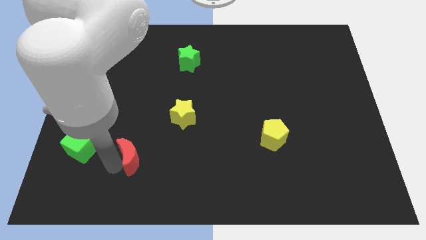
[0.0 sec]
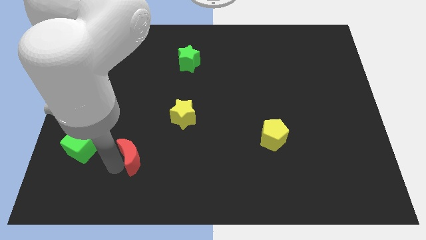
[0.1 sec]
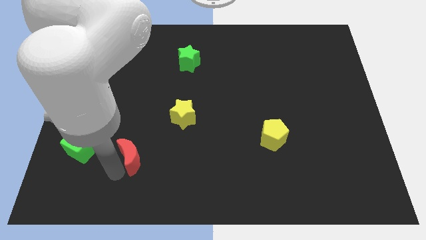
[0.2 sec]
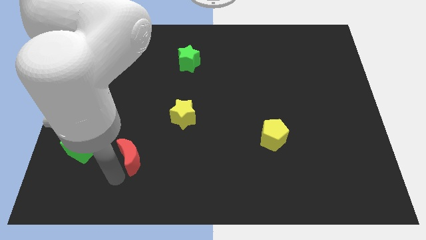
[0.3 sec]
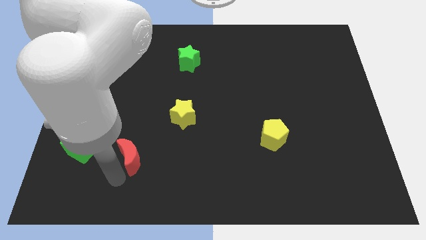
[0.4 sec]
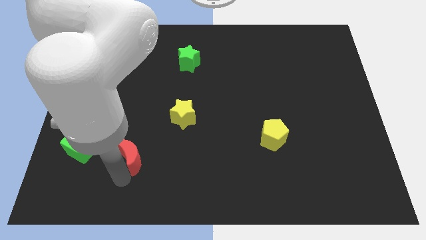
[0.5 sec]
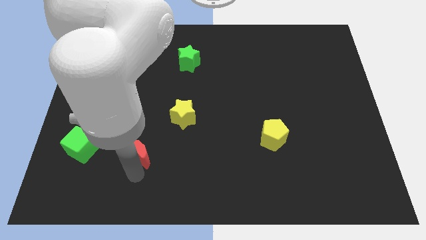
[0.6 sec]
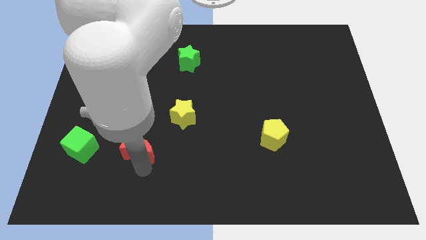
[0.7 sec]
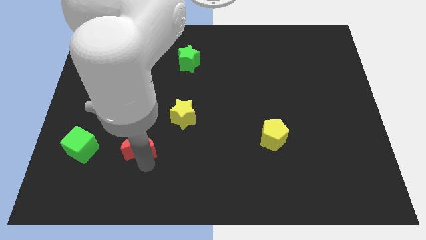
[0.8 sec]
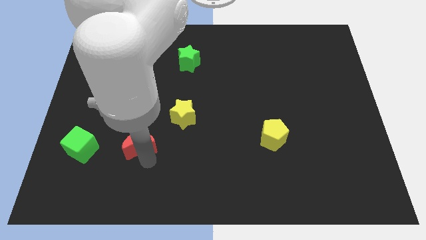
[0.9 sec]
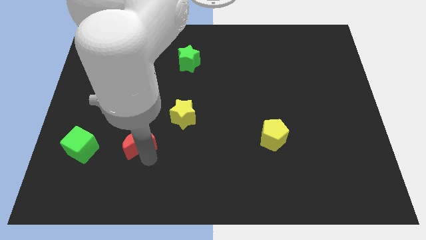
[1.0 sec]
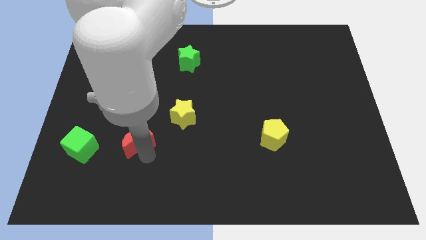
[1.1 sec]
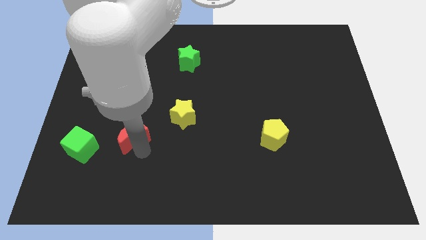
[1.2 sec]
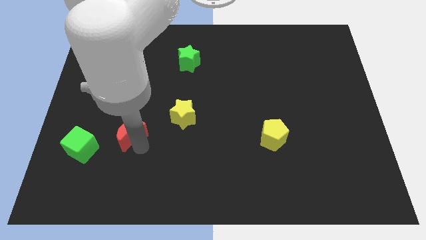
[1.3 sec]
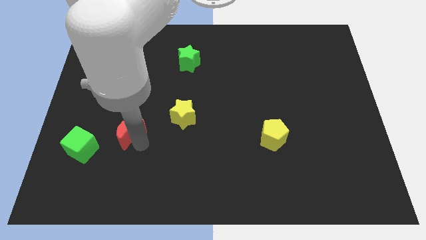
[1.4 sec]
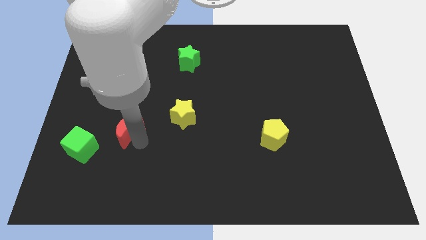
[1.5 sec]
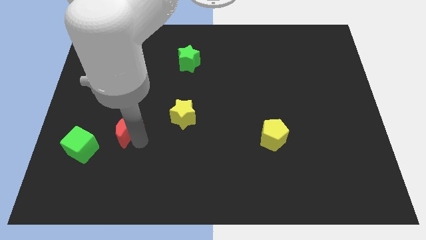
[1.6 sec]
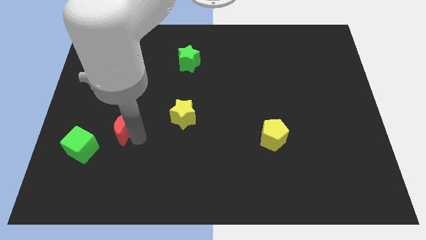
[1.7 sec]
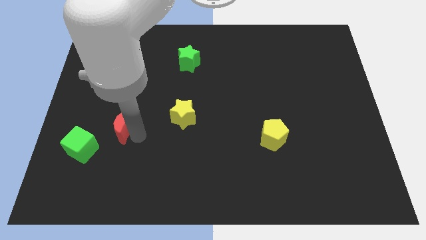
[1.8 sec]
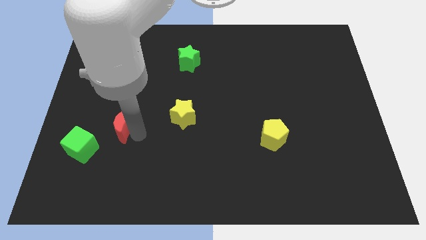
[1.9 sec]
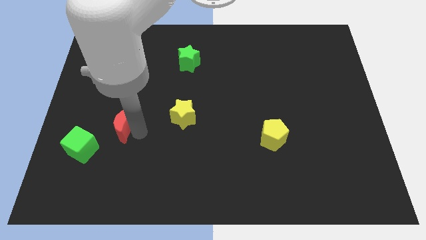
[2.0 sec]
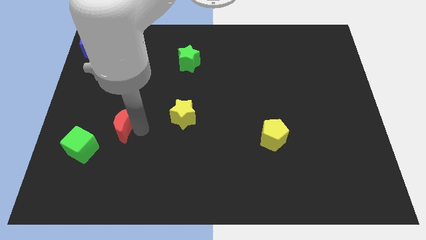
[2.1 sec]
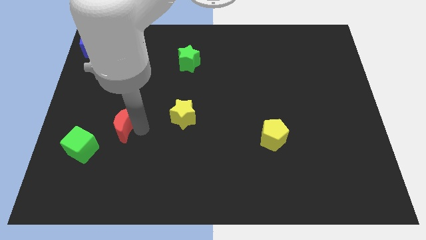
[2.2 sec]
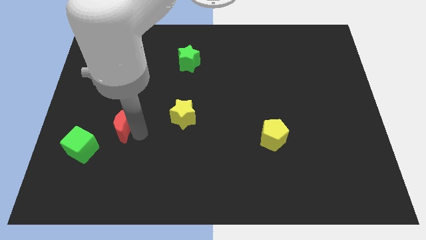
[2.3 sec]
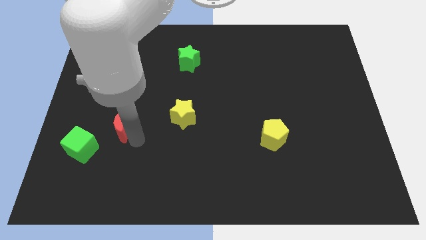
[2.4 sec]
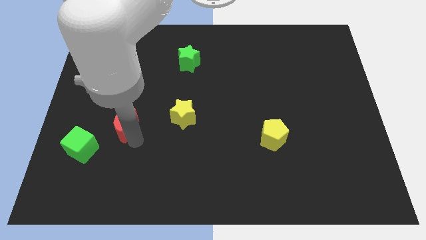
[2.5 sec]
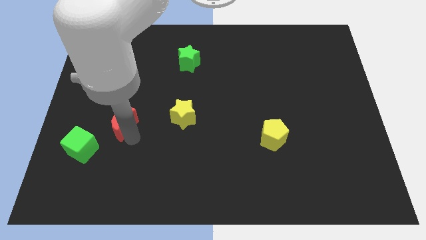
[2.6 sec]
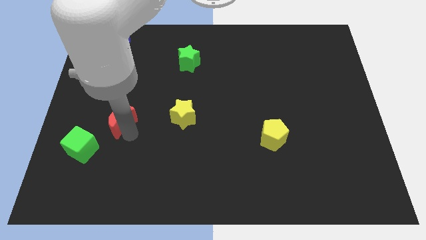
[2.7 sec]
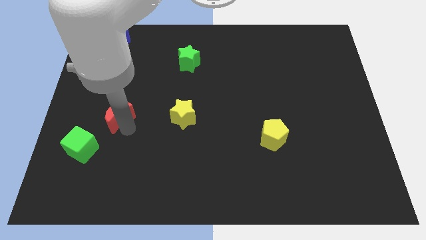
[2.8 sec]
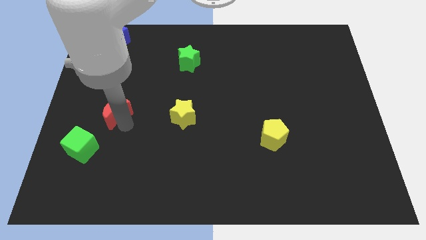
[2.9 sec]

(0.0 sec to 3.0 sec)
move the red crescent to the left of the yellow star

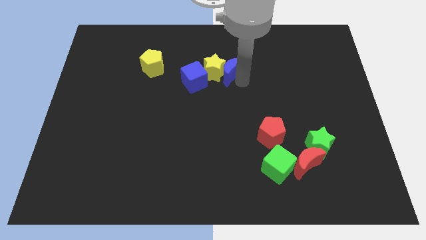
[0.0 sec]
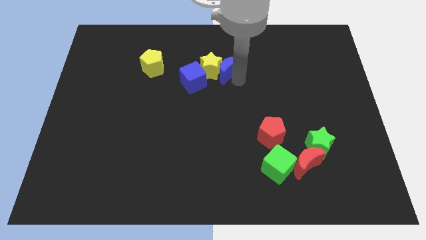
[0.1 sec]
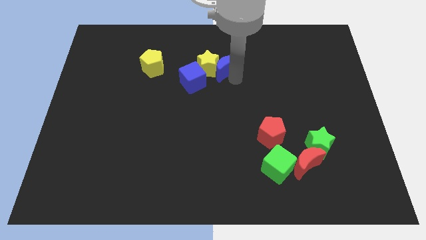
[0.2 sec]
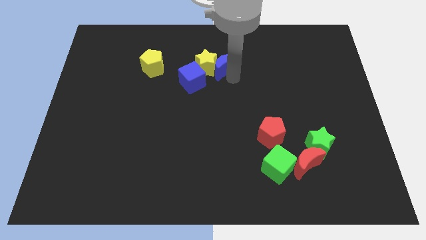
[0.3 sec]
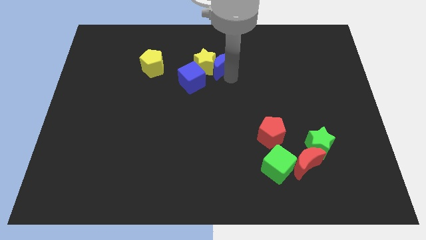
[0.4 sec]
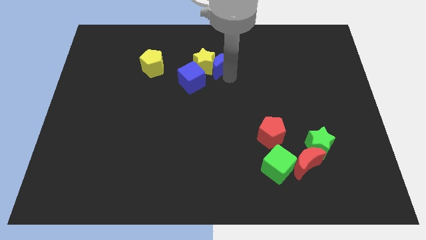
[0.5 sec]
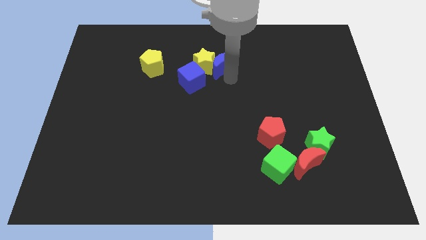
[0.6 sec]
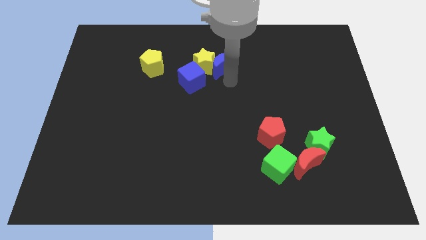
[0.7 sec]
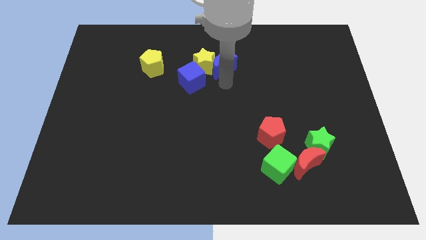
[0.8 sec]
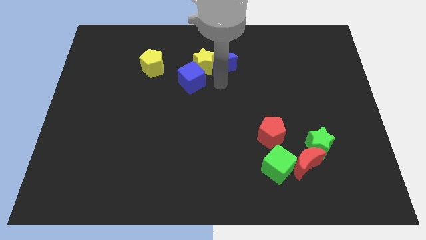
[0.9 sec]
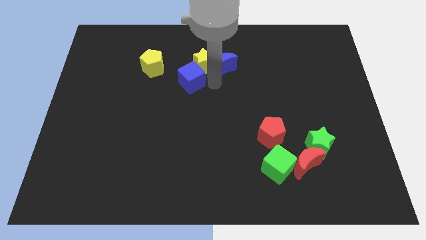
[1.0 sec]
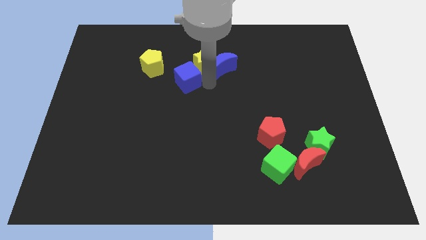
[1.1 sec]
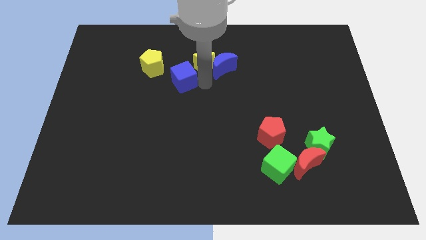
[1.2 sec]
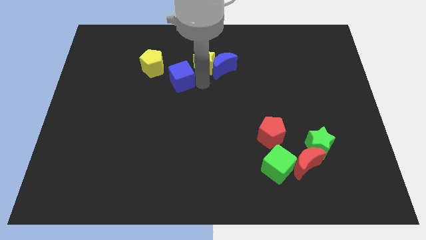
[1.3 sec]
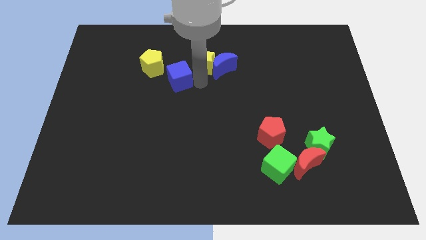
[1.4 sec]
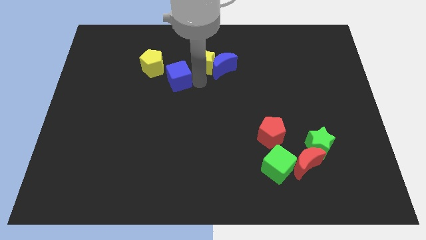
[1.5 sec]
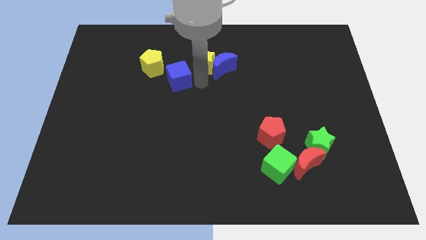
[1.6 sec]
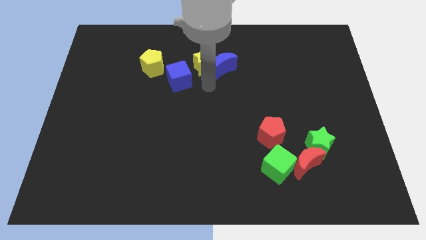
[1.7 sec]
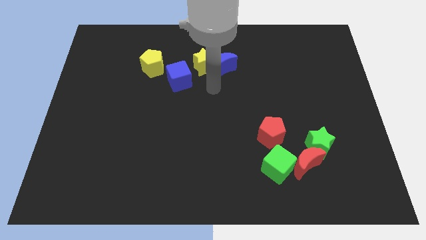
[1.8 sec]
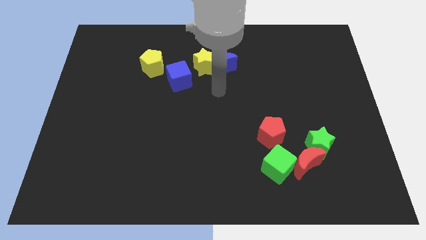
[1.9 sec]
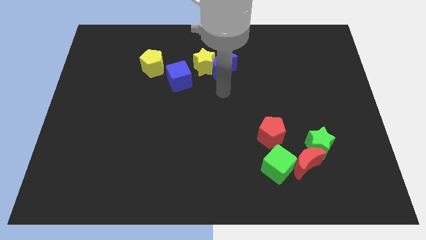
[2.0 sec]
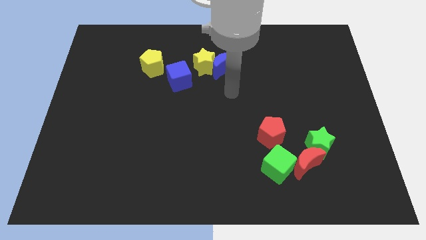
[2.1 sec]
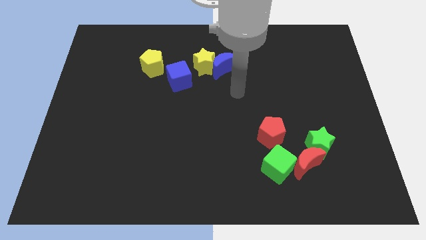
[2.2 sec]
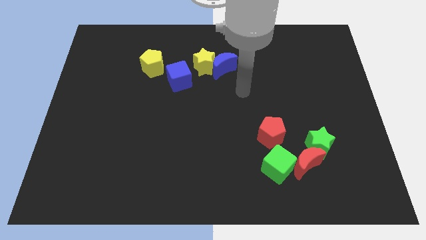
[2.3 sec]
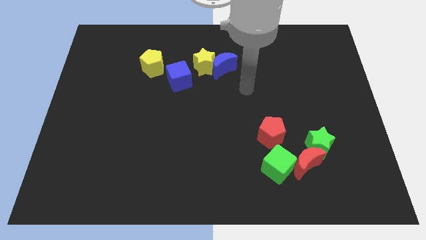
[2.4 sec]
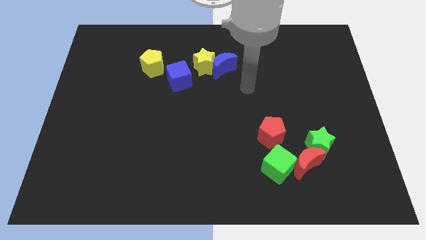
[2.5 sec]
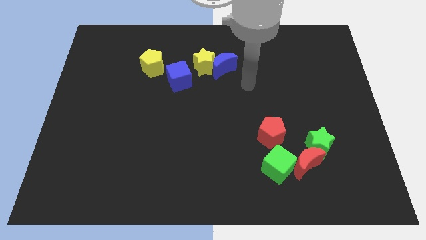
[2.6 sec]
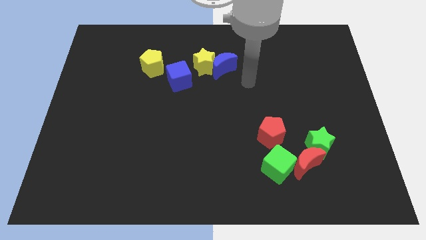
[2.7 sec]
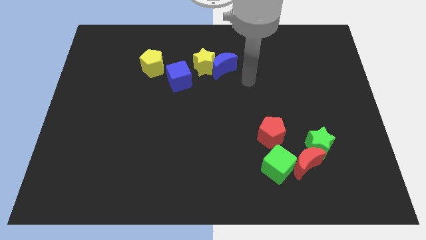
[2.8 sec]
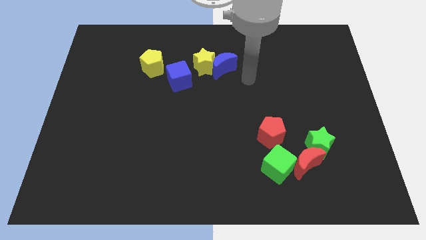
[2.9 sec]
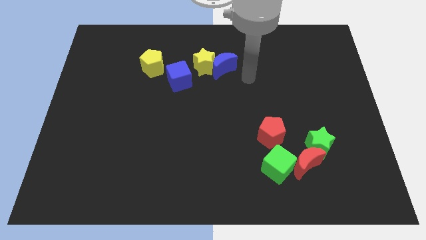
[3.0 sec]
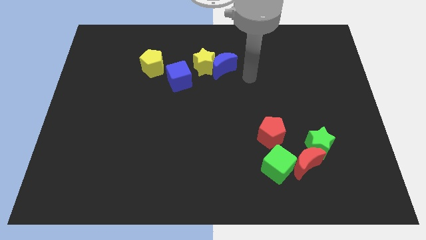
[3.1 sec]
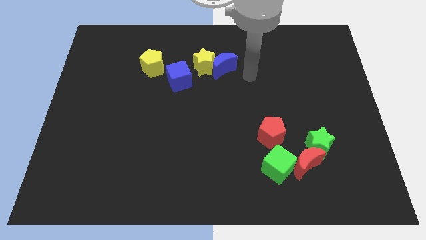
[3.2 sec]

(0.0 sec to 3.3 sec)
push the blue cube towards the left slightly

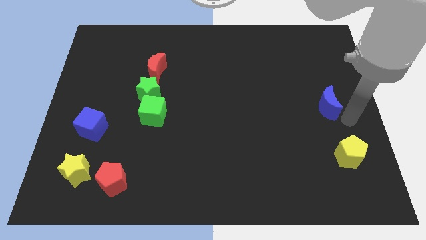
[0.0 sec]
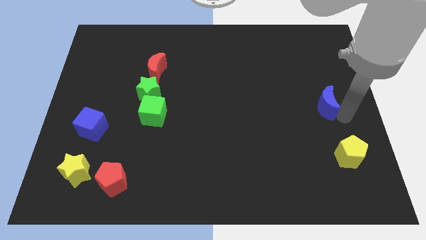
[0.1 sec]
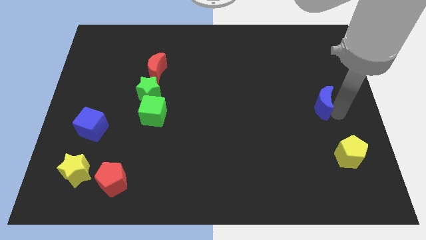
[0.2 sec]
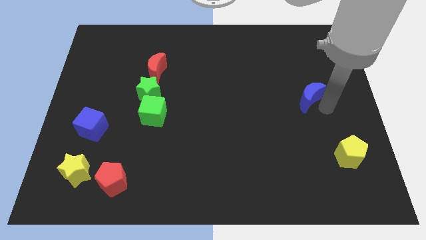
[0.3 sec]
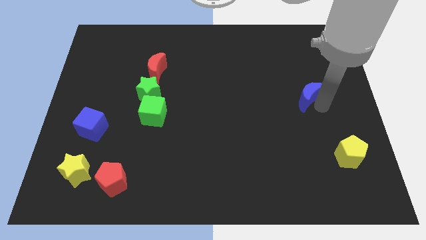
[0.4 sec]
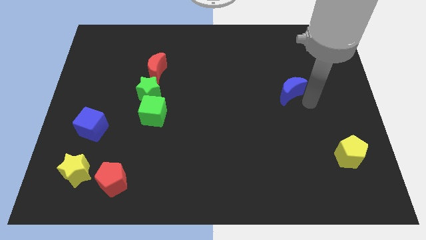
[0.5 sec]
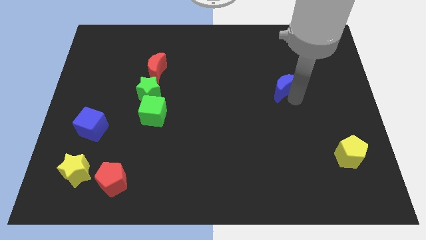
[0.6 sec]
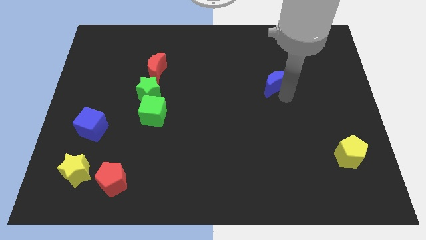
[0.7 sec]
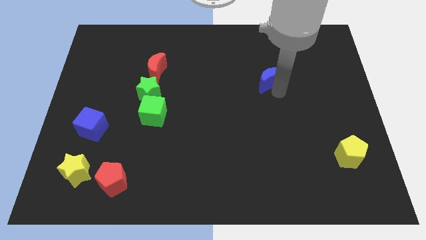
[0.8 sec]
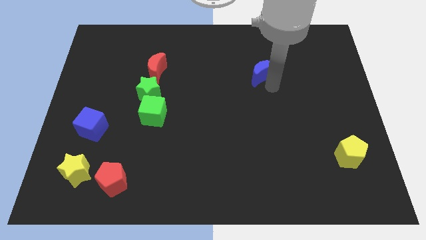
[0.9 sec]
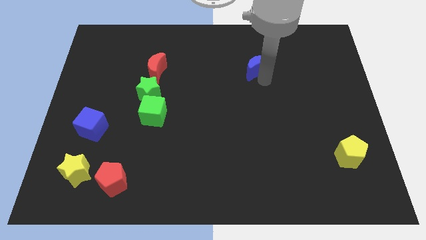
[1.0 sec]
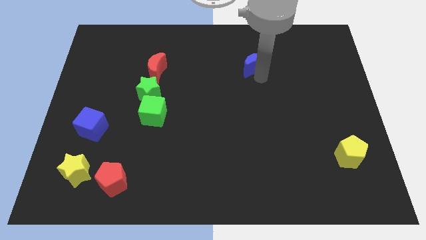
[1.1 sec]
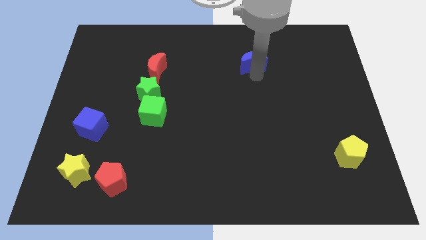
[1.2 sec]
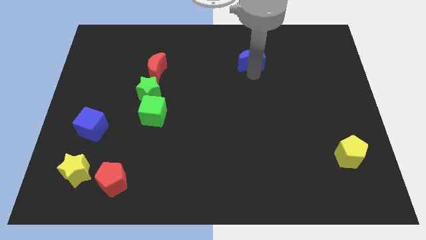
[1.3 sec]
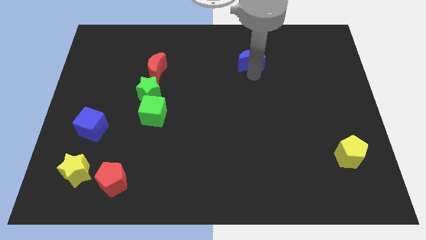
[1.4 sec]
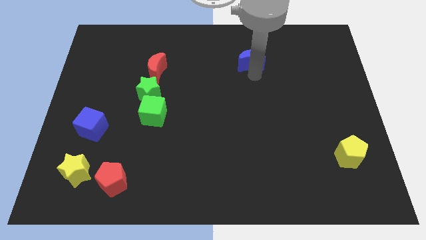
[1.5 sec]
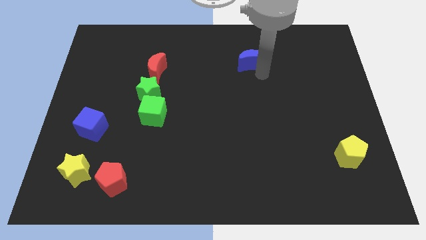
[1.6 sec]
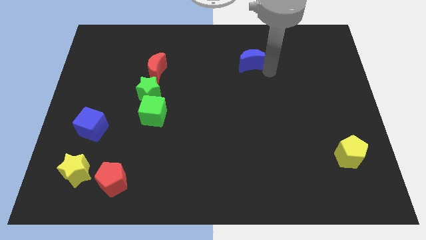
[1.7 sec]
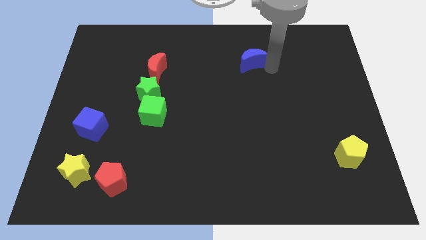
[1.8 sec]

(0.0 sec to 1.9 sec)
push the blue moon towards the top side

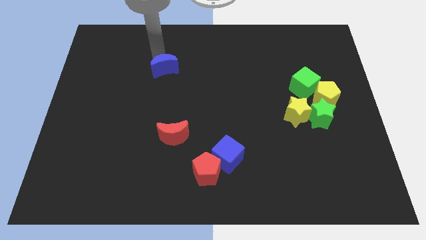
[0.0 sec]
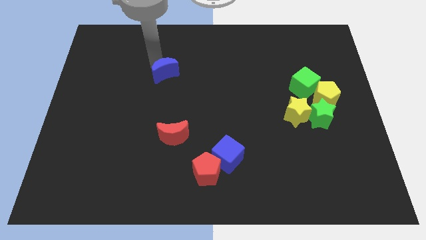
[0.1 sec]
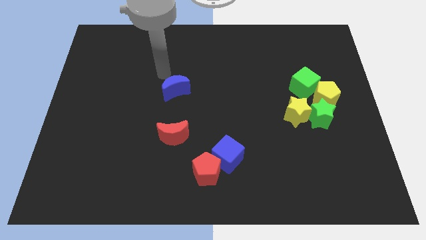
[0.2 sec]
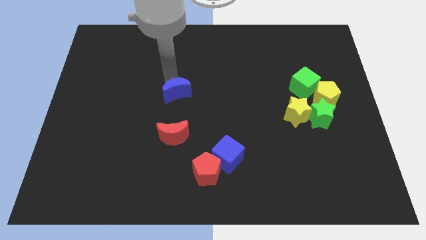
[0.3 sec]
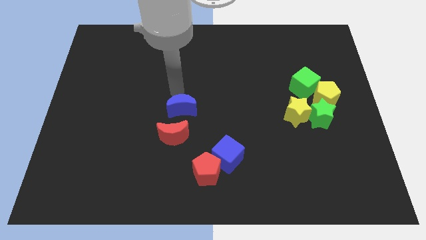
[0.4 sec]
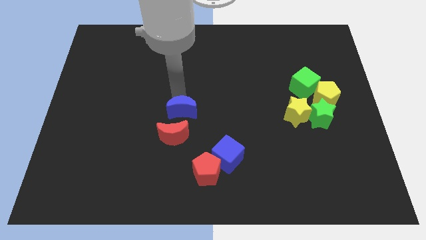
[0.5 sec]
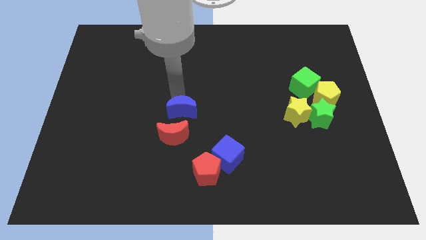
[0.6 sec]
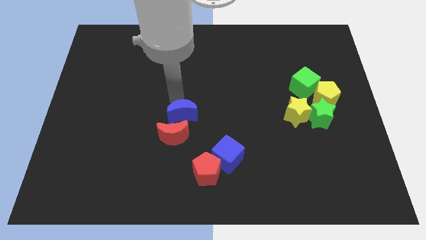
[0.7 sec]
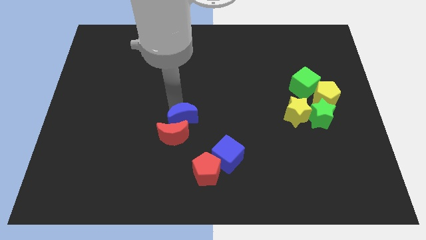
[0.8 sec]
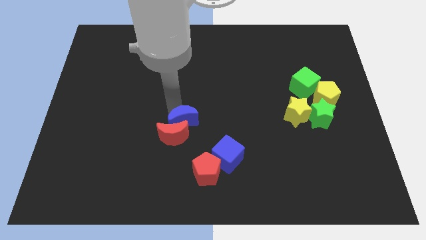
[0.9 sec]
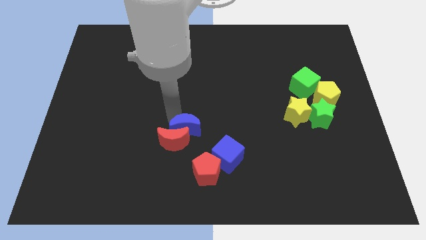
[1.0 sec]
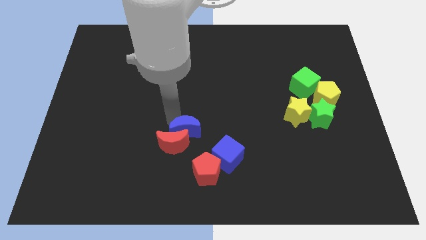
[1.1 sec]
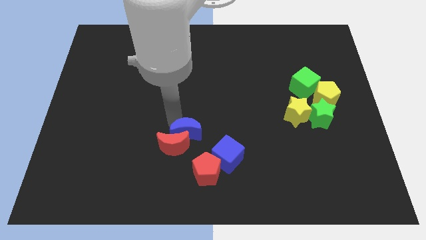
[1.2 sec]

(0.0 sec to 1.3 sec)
push the blue moon into the red moon
